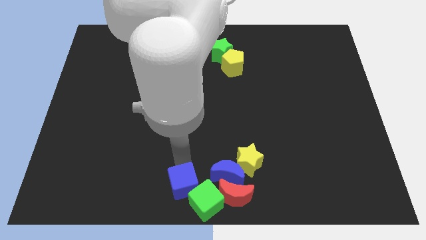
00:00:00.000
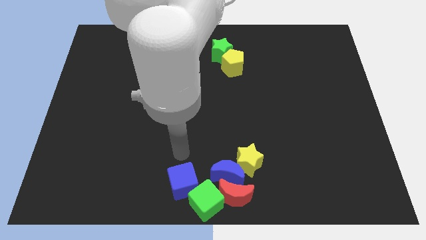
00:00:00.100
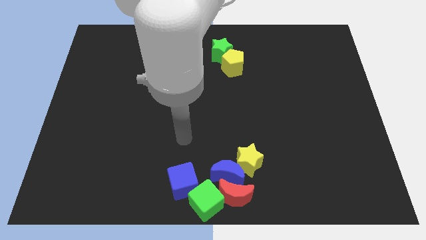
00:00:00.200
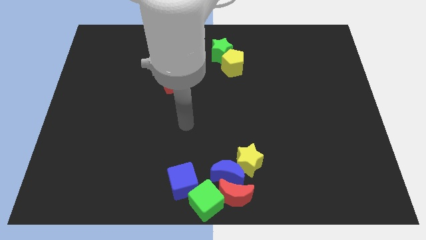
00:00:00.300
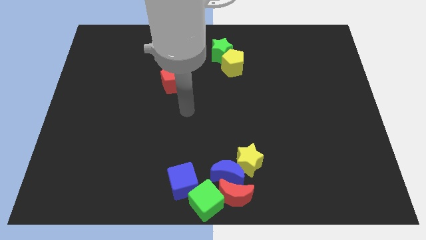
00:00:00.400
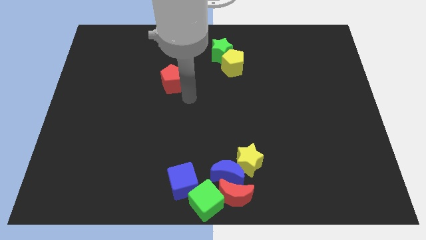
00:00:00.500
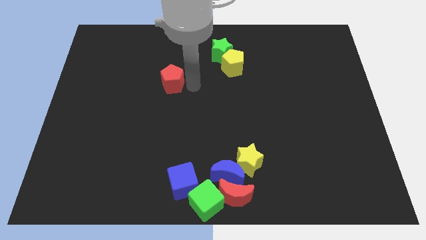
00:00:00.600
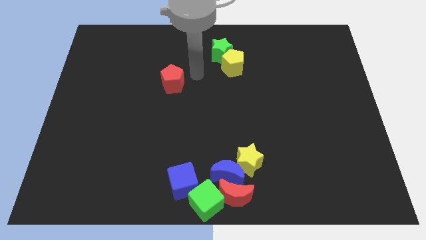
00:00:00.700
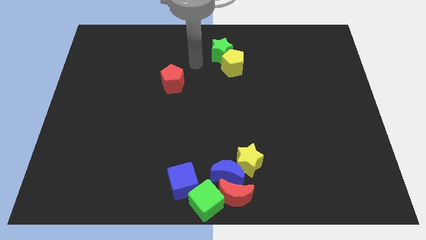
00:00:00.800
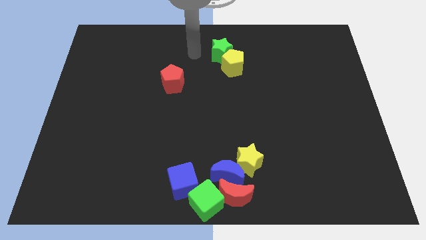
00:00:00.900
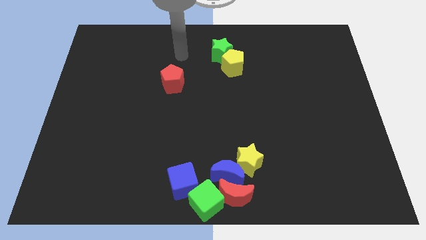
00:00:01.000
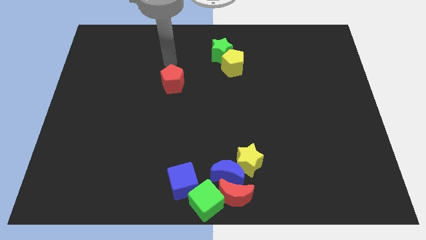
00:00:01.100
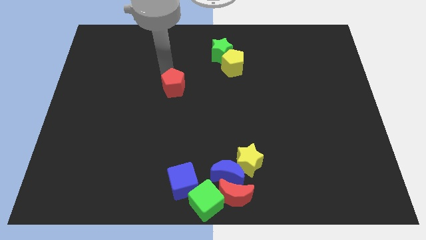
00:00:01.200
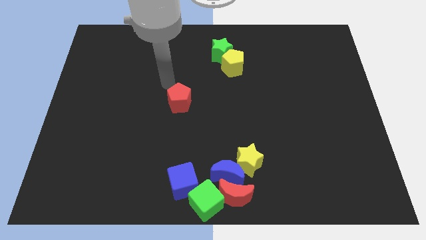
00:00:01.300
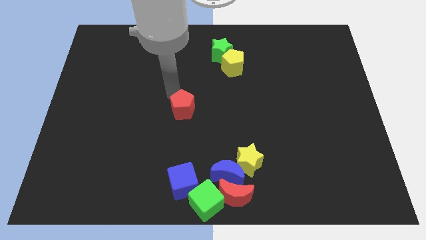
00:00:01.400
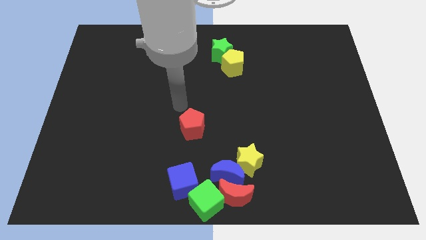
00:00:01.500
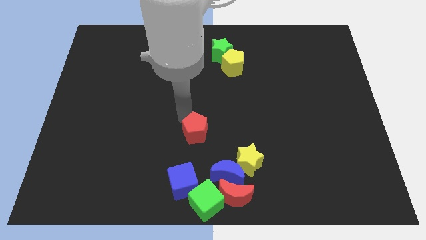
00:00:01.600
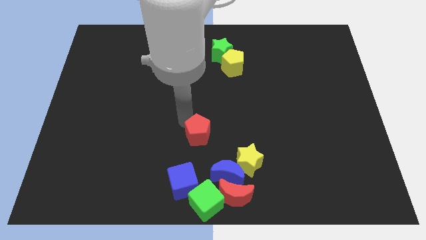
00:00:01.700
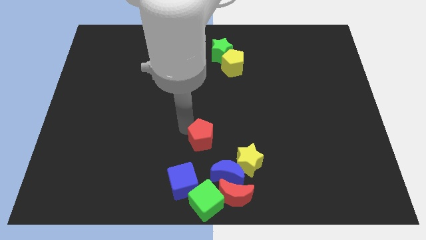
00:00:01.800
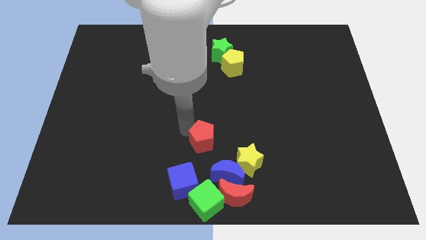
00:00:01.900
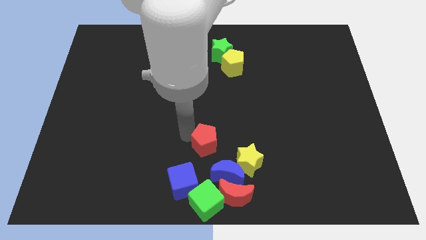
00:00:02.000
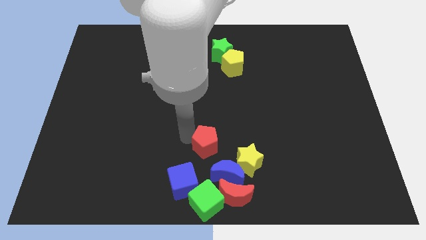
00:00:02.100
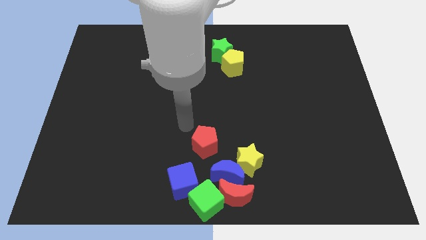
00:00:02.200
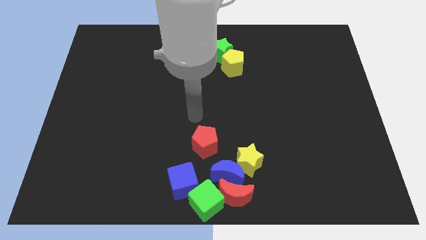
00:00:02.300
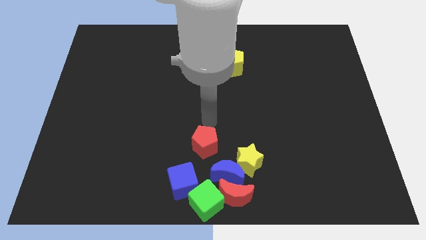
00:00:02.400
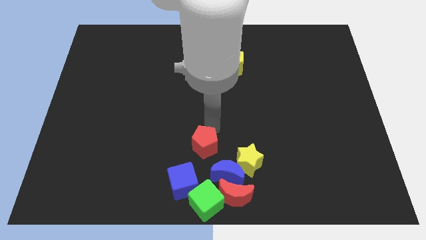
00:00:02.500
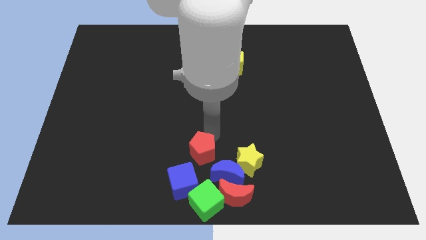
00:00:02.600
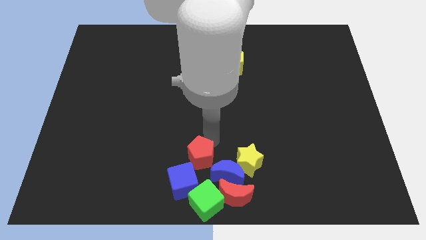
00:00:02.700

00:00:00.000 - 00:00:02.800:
place the red pentagon vertically above green cube

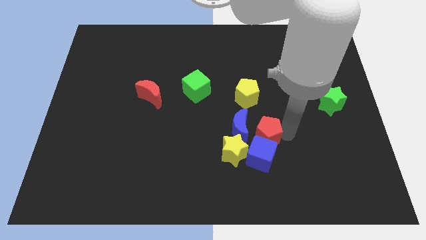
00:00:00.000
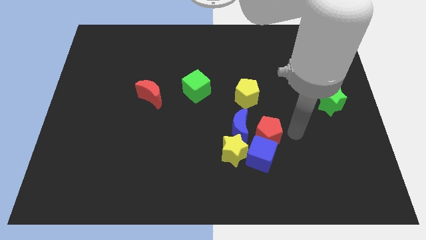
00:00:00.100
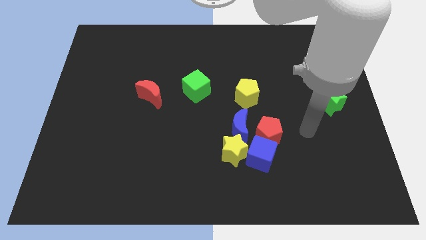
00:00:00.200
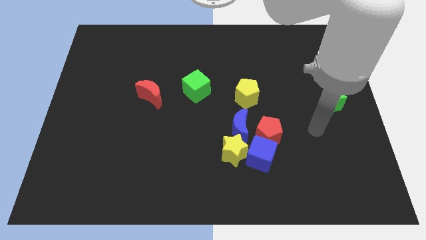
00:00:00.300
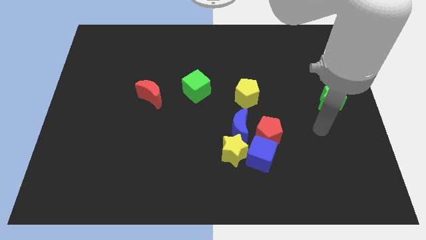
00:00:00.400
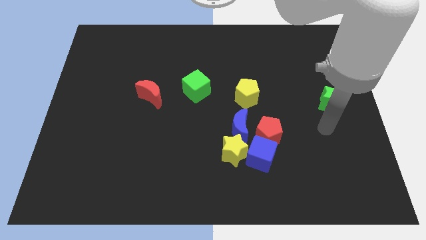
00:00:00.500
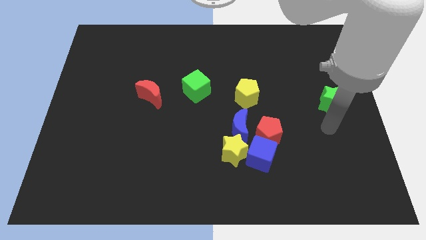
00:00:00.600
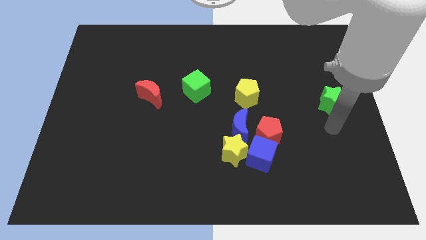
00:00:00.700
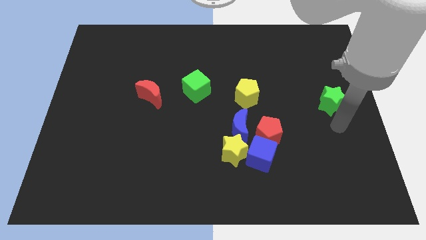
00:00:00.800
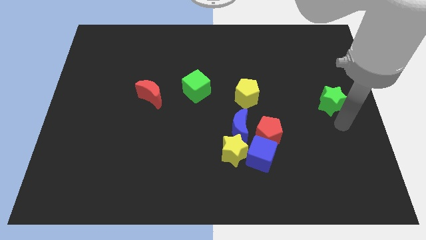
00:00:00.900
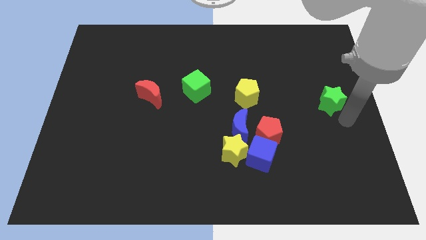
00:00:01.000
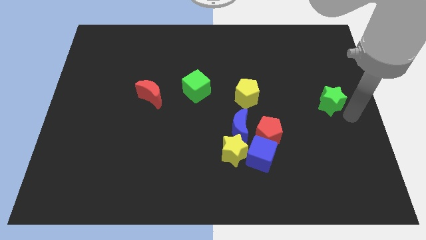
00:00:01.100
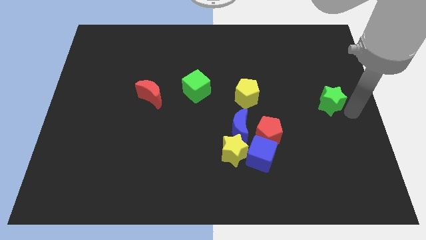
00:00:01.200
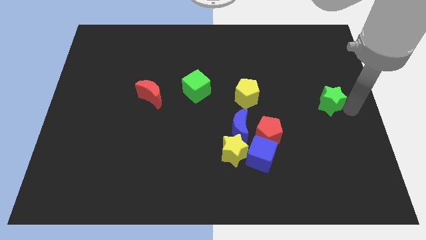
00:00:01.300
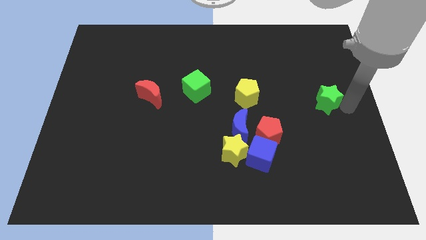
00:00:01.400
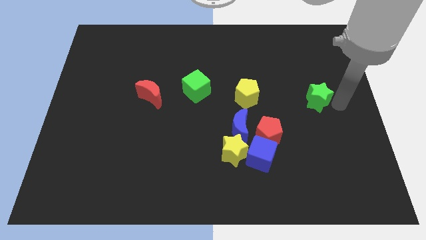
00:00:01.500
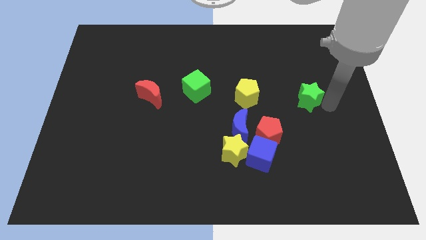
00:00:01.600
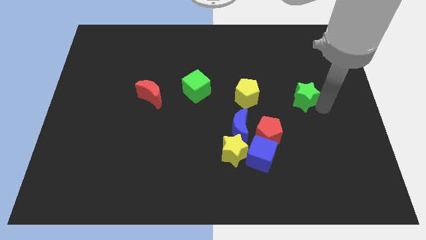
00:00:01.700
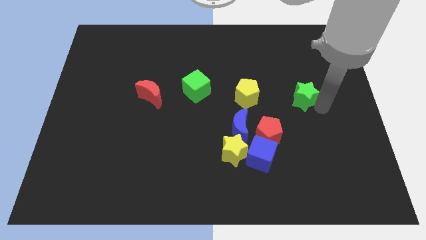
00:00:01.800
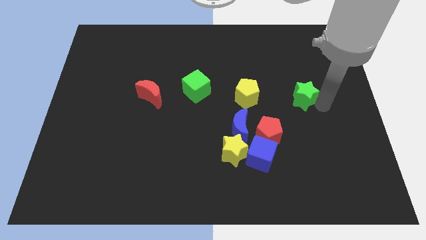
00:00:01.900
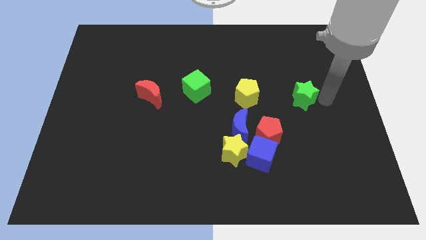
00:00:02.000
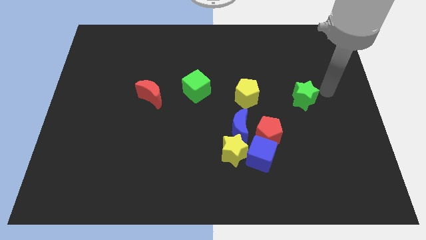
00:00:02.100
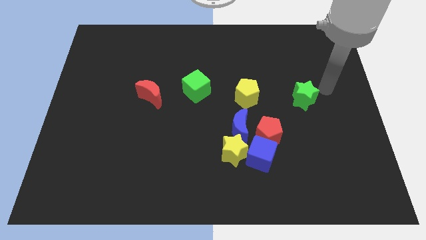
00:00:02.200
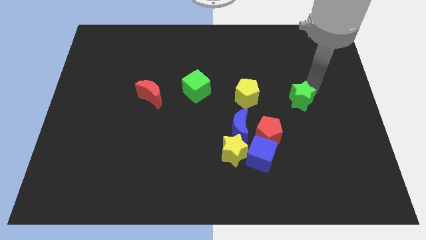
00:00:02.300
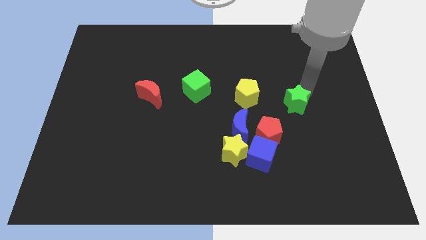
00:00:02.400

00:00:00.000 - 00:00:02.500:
move the green star to the right of the yellow pentagon

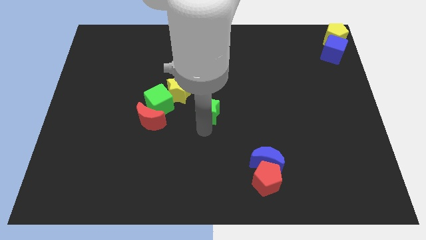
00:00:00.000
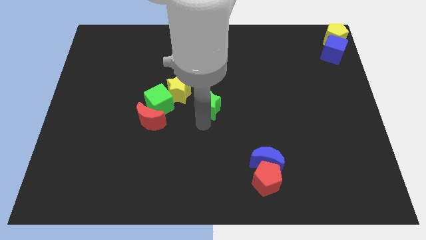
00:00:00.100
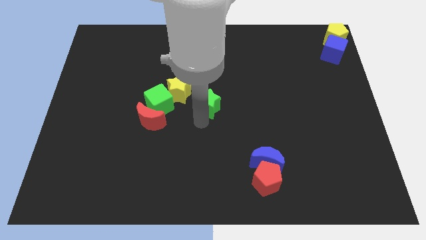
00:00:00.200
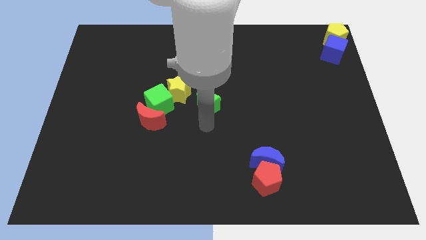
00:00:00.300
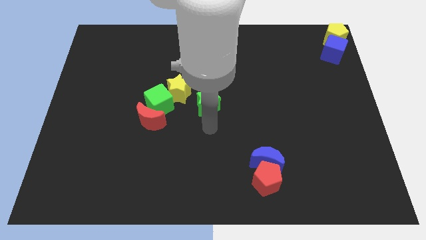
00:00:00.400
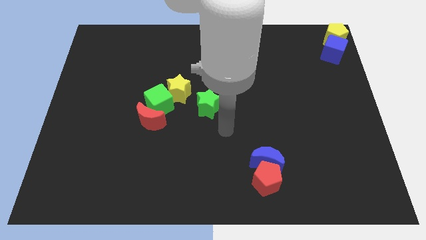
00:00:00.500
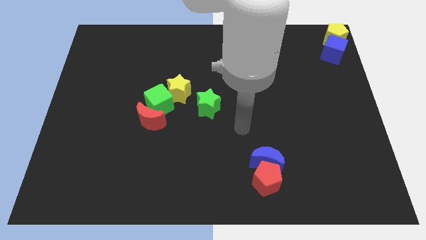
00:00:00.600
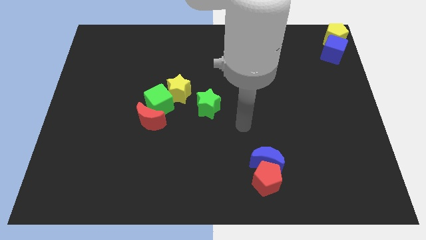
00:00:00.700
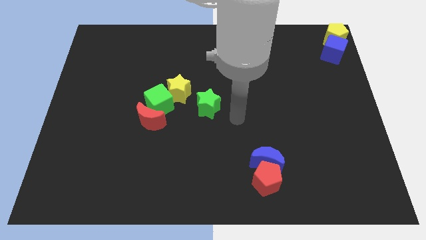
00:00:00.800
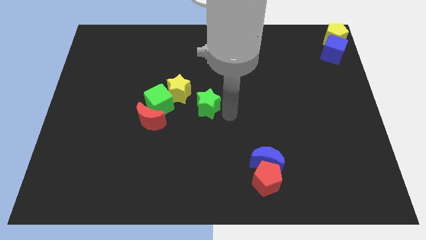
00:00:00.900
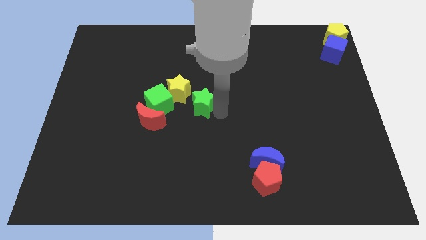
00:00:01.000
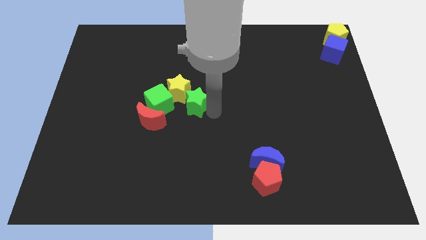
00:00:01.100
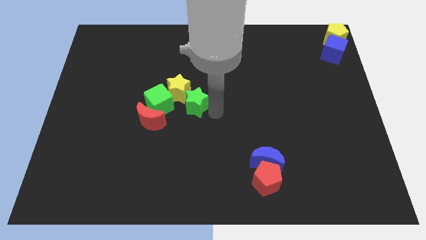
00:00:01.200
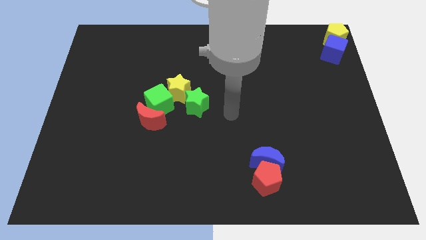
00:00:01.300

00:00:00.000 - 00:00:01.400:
push the green star into the yellow star on the center of the board

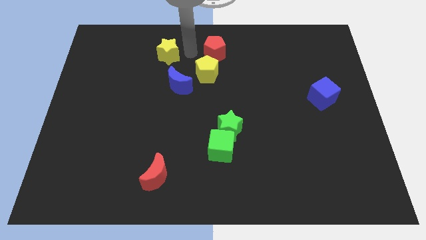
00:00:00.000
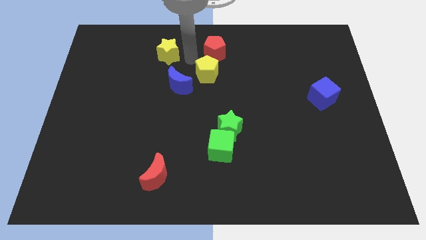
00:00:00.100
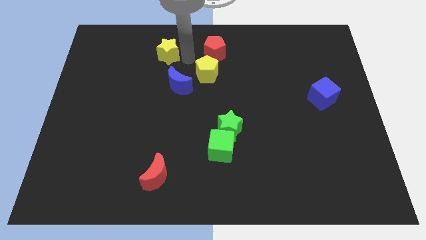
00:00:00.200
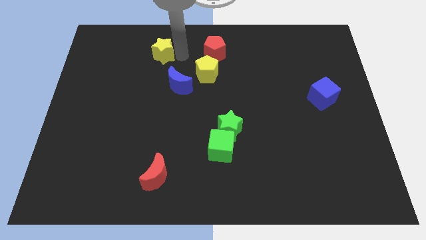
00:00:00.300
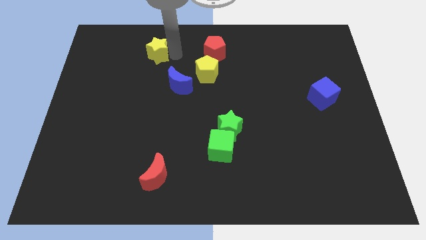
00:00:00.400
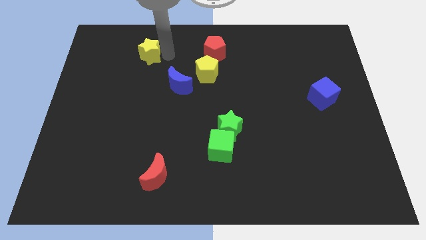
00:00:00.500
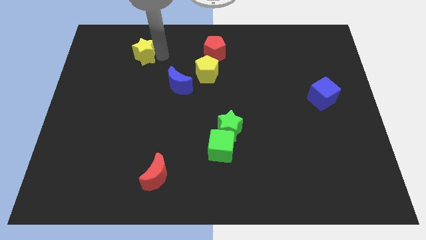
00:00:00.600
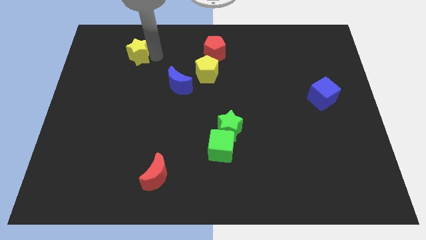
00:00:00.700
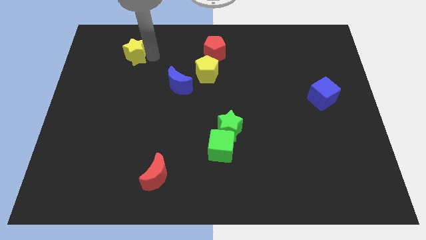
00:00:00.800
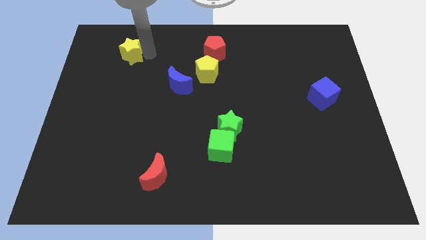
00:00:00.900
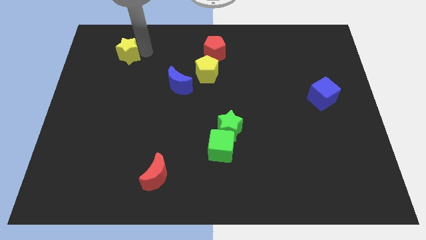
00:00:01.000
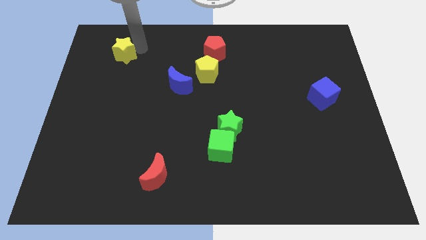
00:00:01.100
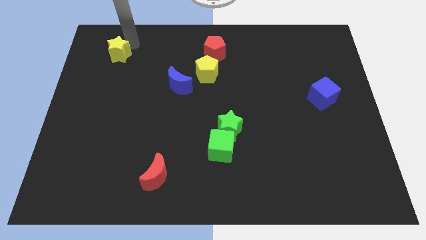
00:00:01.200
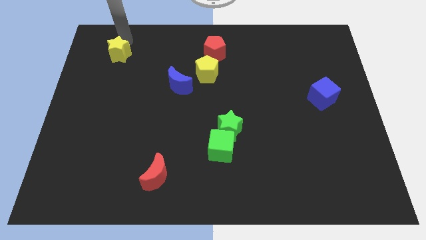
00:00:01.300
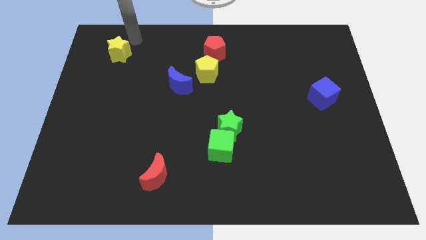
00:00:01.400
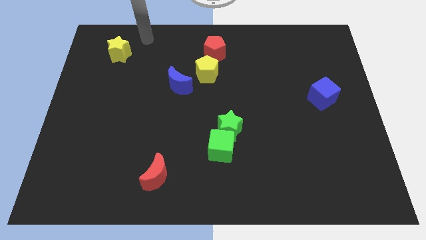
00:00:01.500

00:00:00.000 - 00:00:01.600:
push the yellow star towards the left side of the board

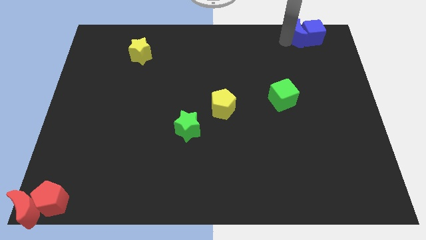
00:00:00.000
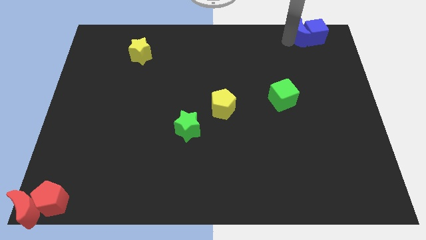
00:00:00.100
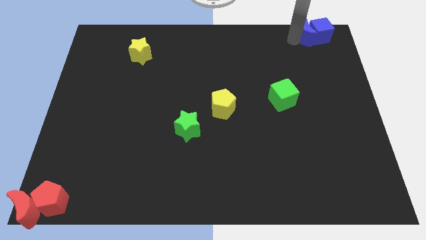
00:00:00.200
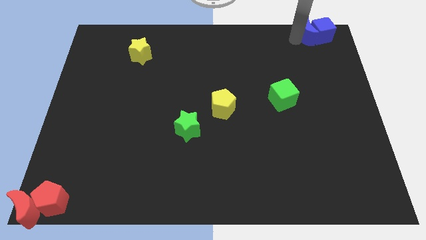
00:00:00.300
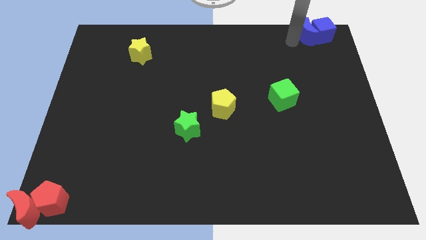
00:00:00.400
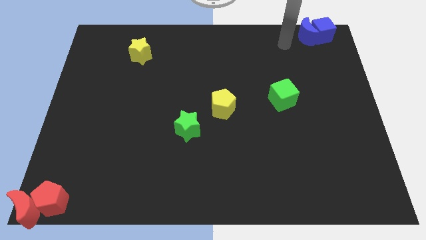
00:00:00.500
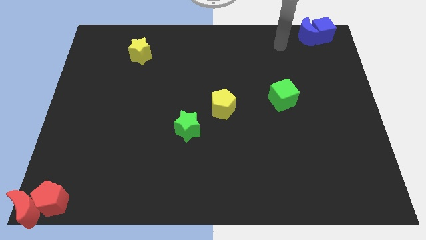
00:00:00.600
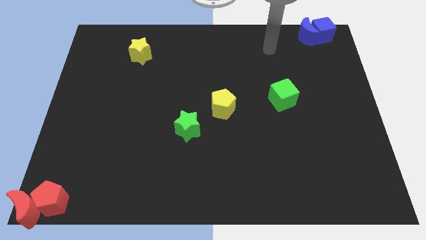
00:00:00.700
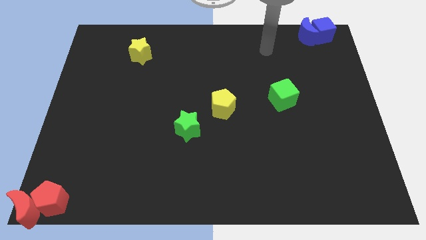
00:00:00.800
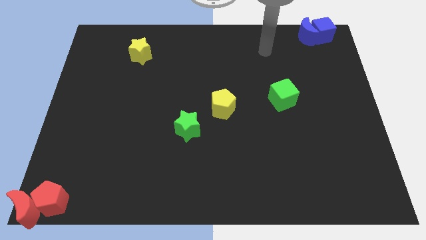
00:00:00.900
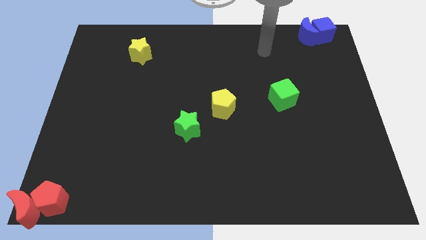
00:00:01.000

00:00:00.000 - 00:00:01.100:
move the blue blocks to the top right corner of the board
